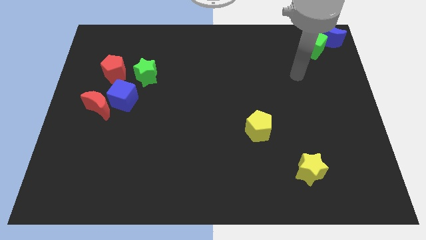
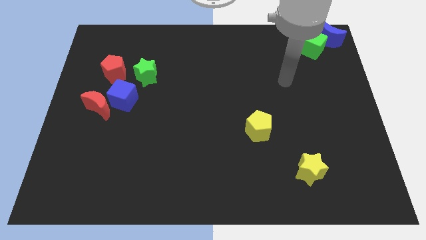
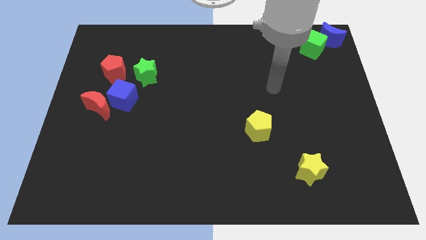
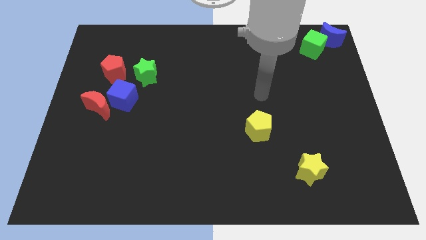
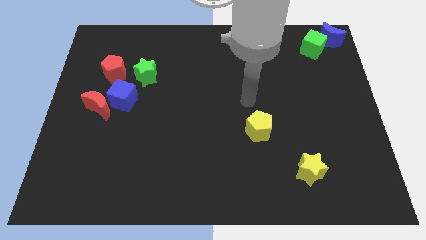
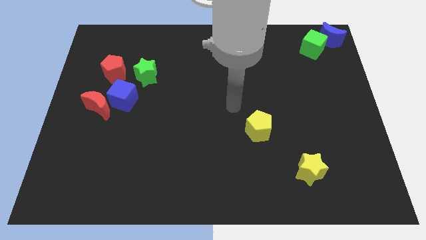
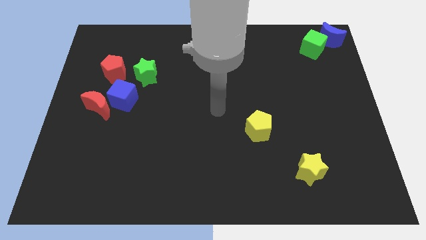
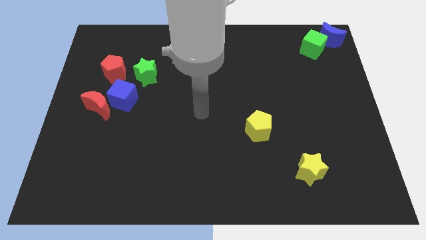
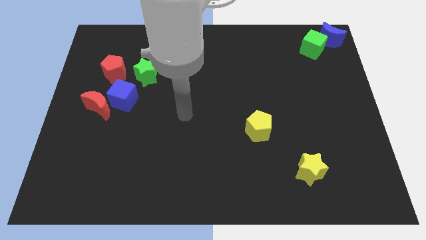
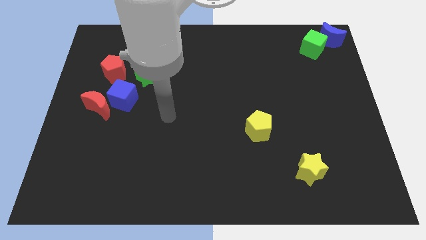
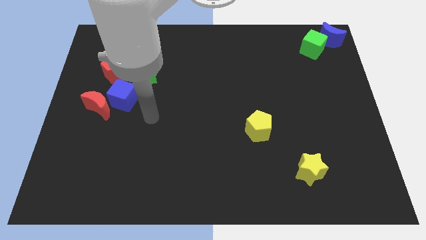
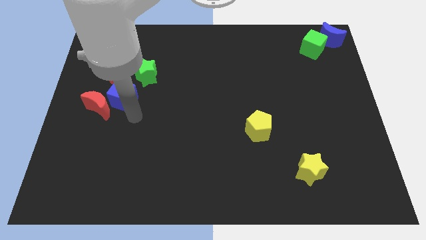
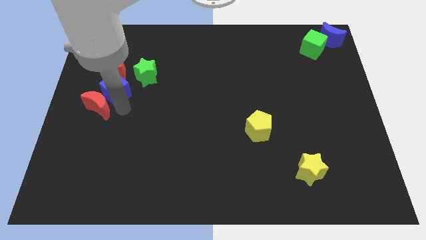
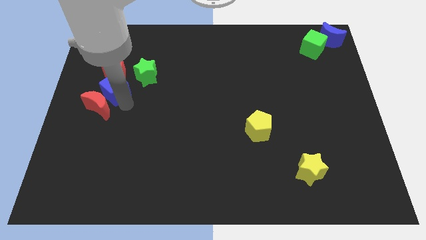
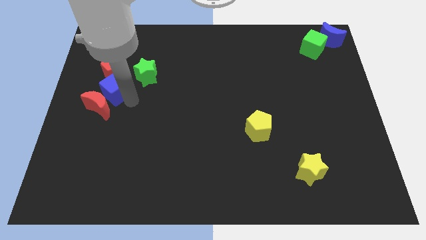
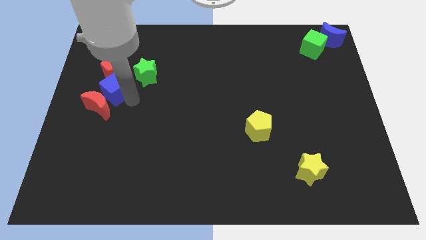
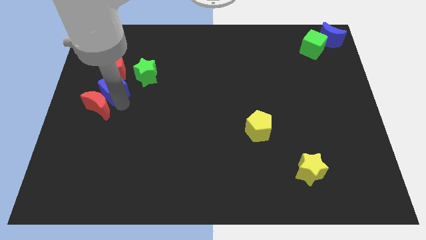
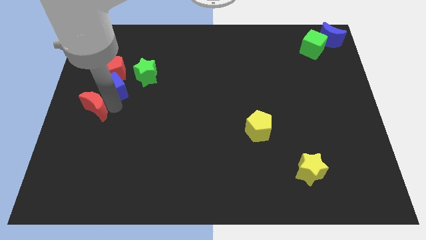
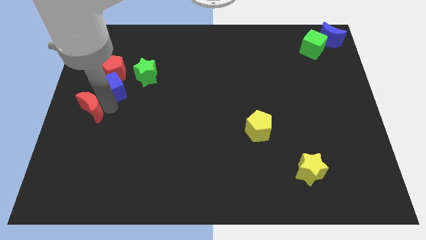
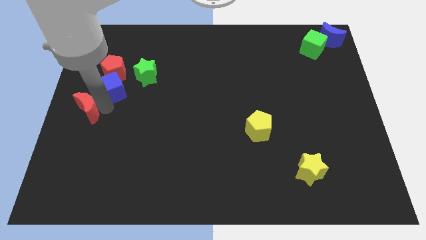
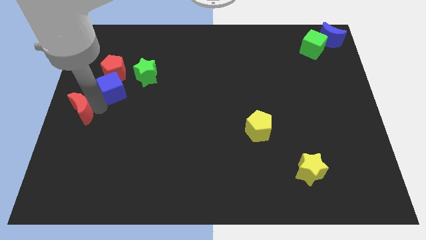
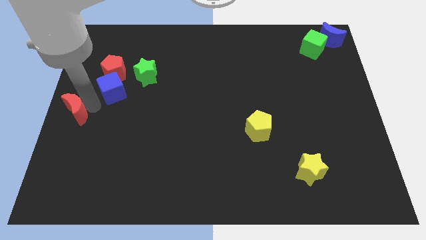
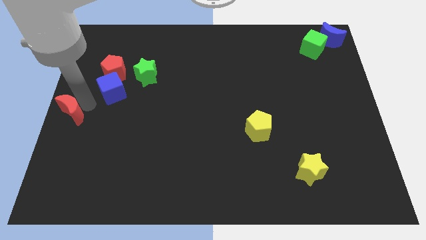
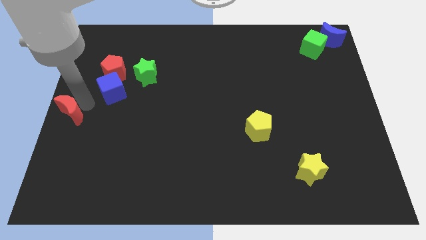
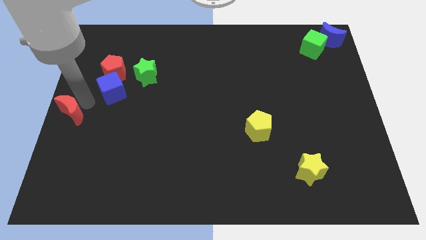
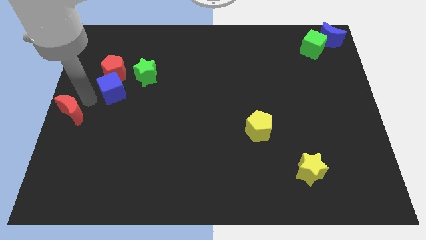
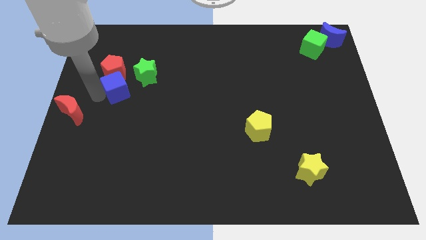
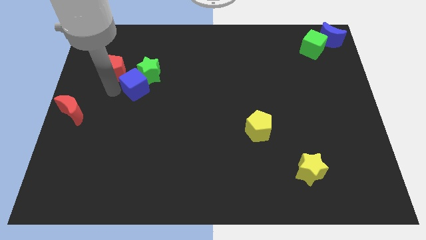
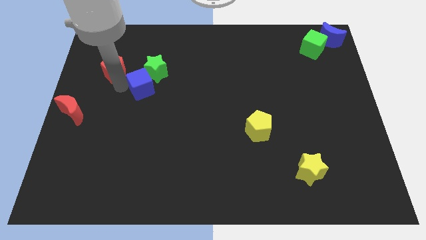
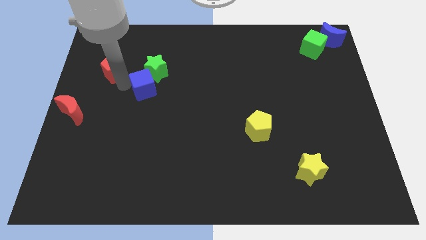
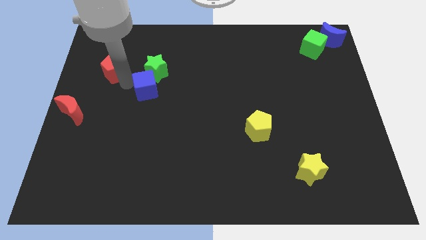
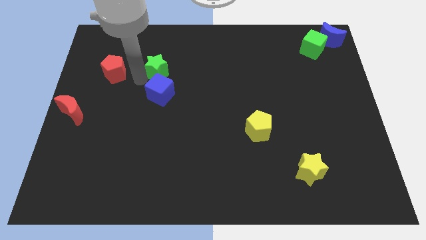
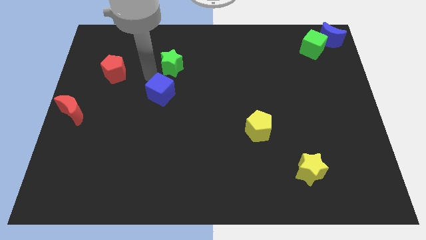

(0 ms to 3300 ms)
separate red crescent and the blue cube

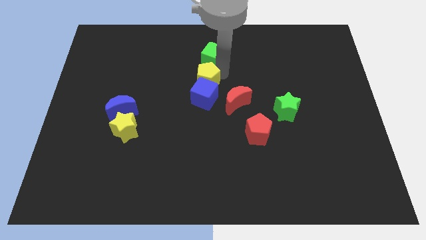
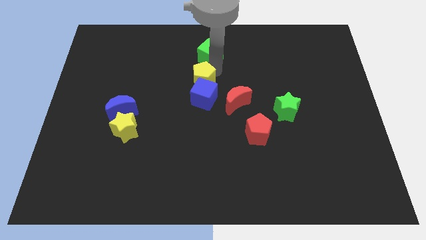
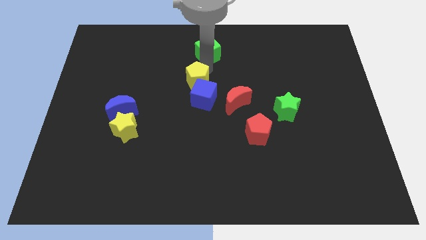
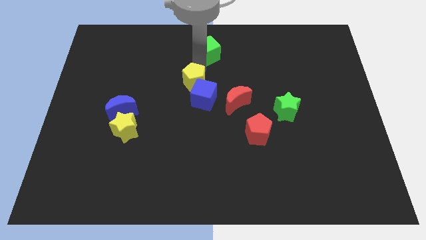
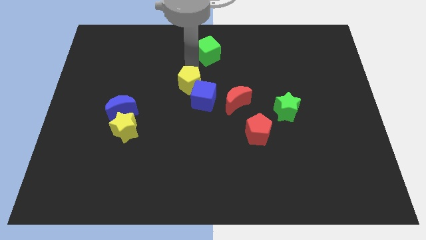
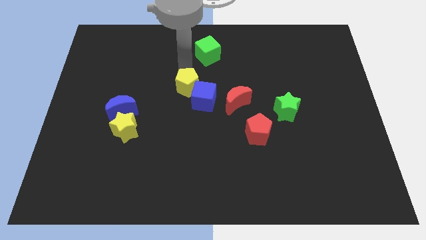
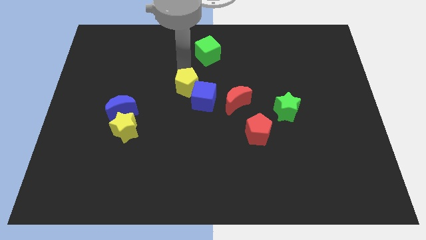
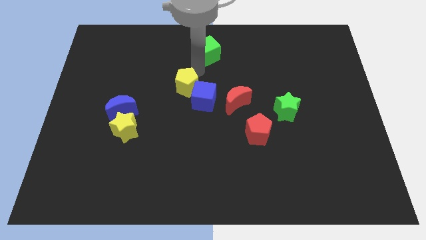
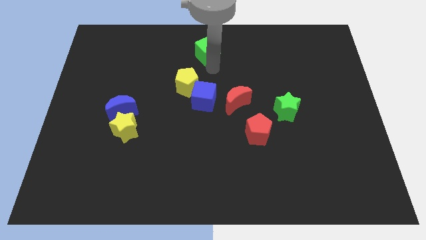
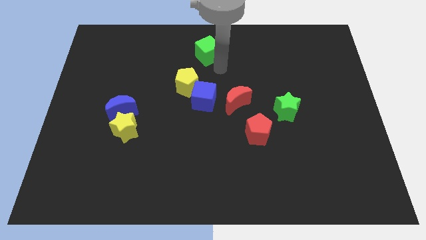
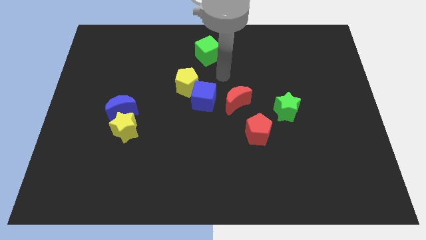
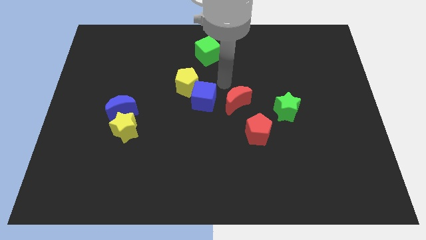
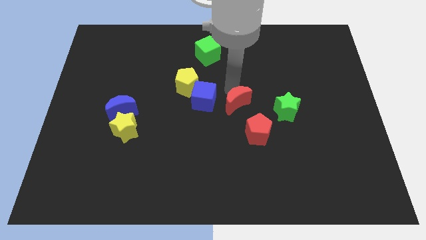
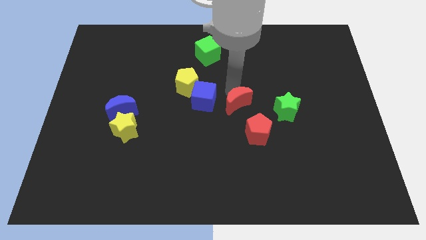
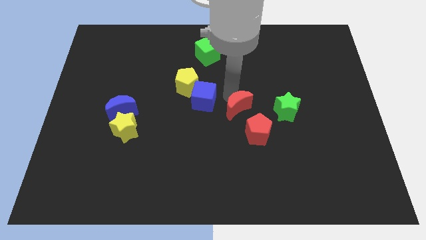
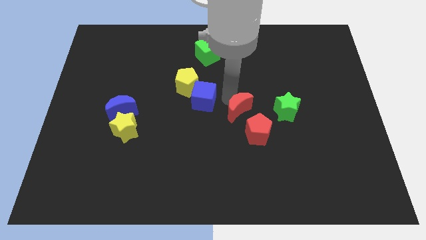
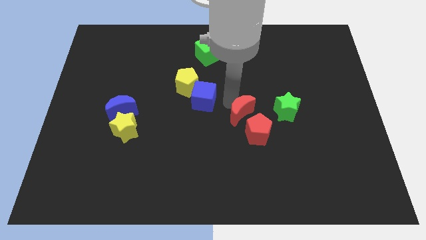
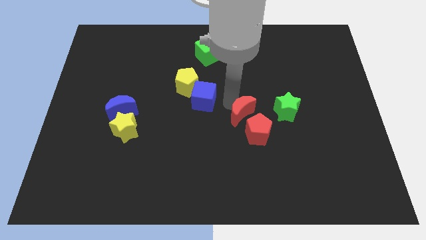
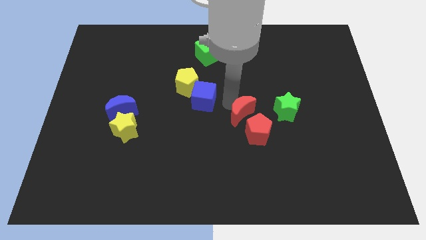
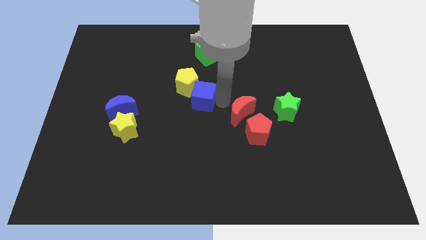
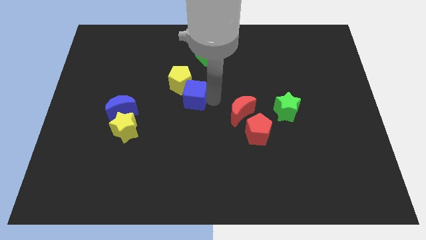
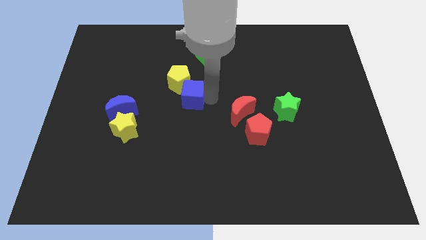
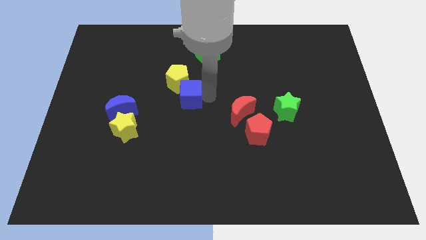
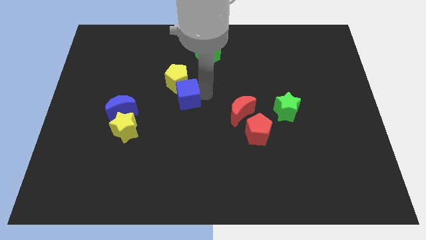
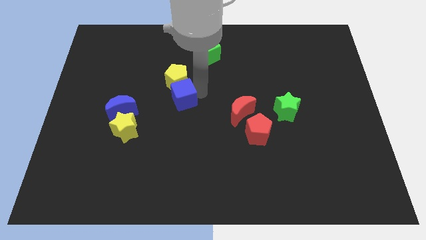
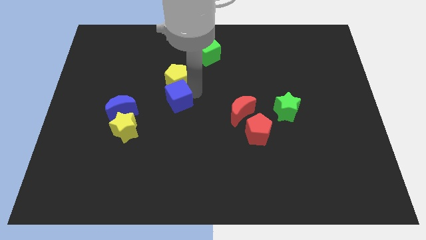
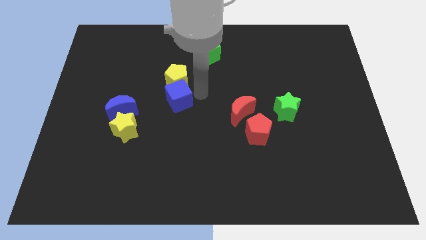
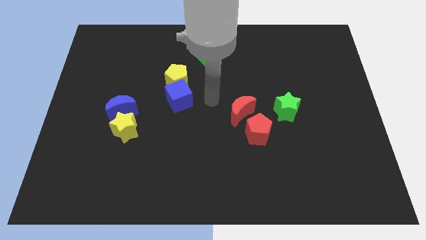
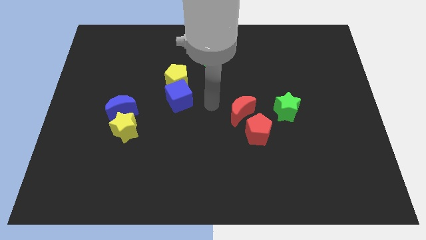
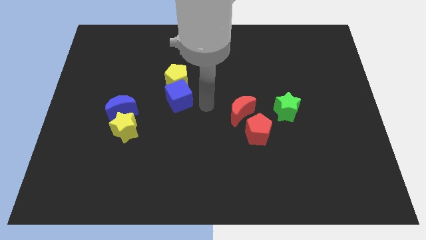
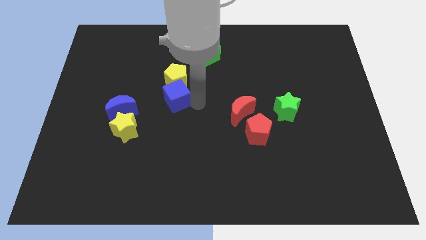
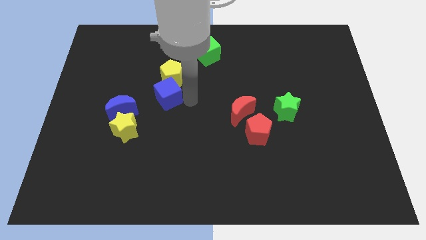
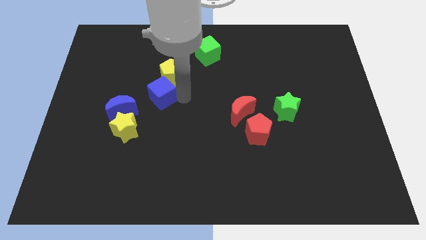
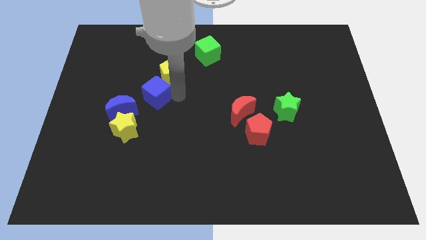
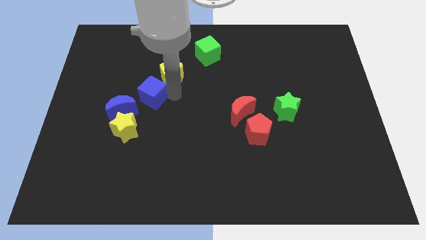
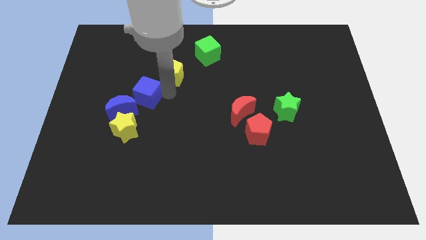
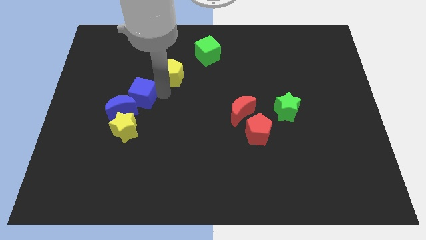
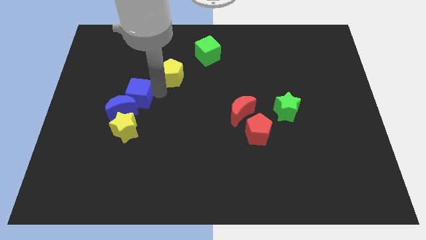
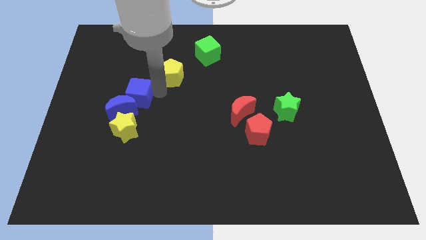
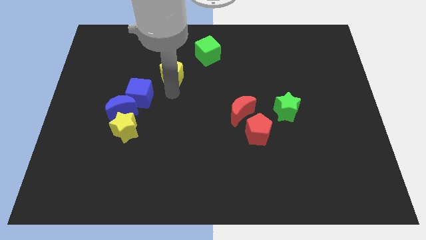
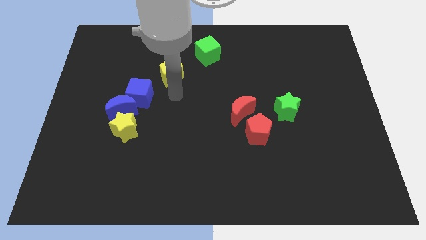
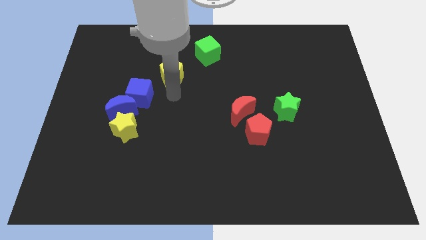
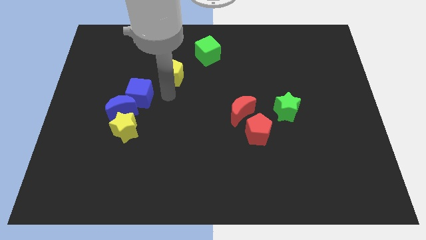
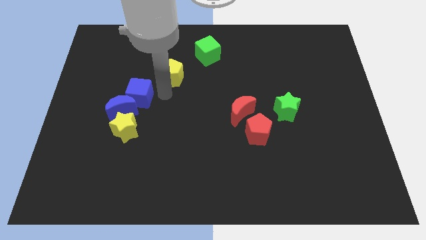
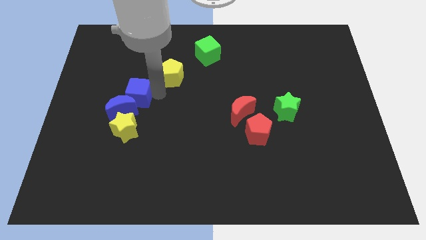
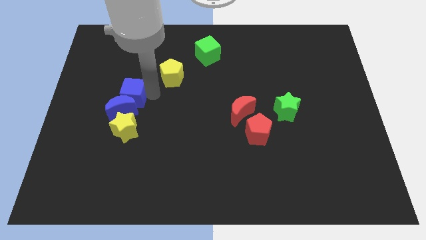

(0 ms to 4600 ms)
move the blue cube to the top of the blue crescent

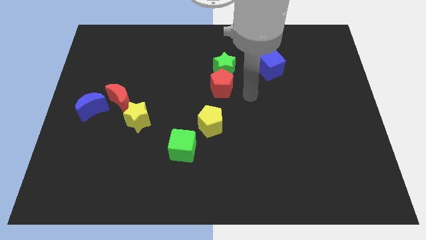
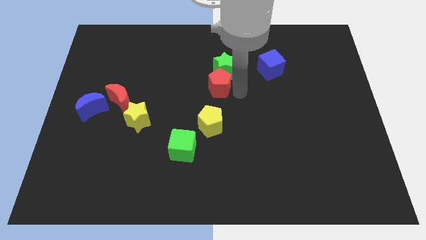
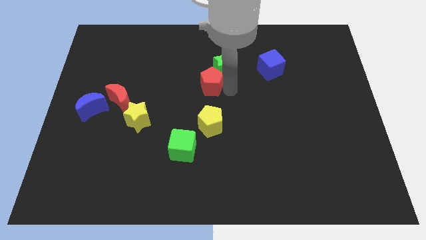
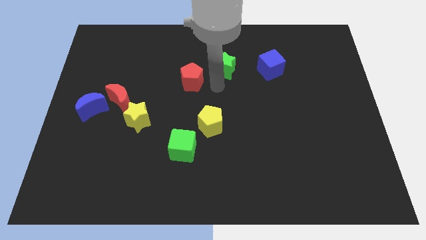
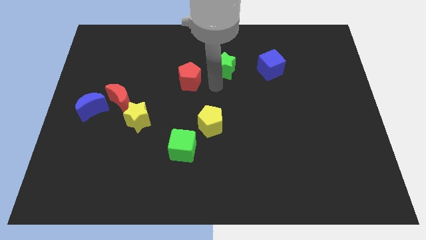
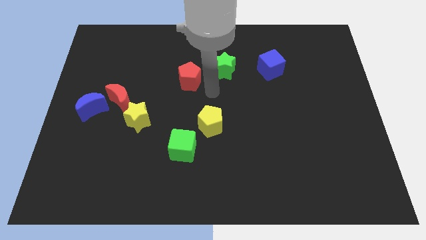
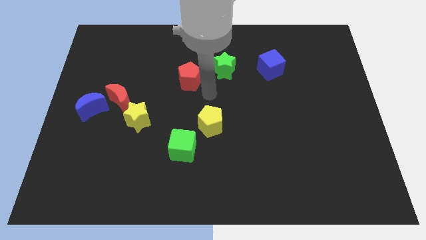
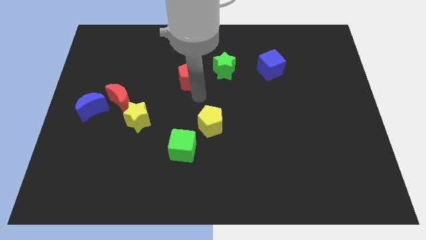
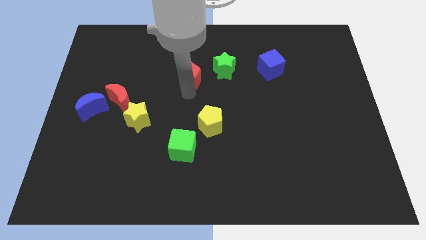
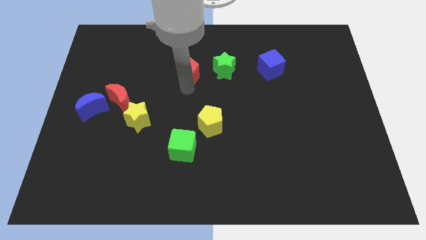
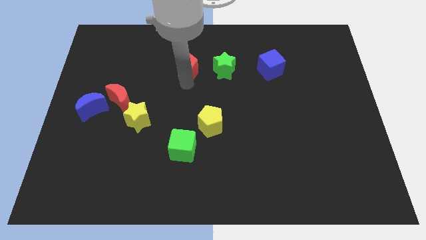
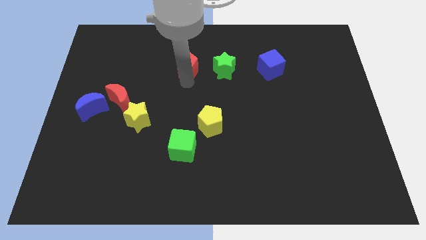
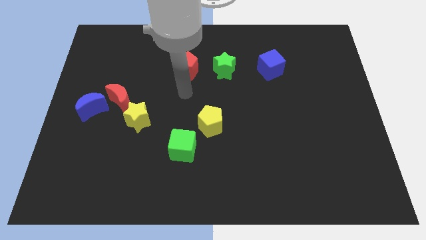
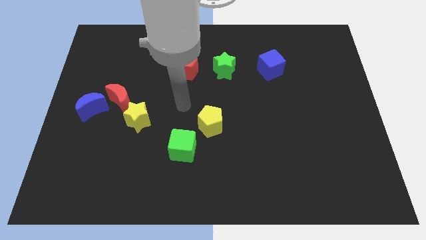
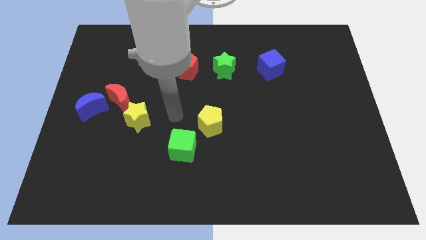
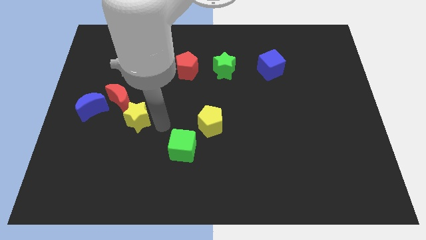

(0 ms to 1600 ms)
place red pentagon to the left side of green star
